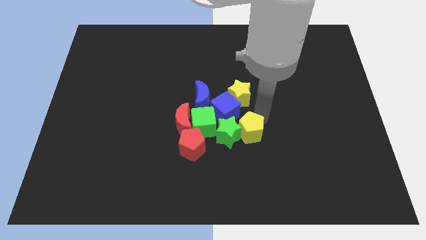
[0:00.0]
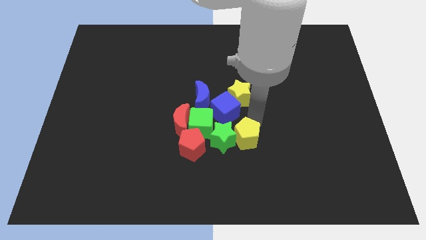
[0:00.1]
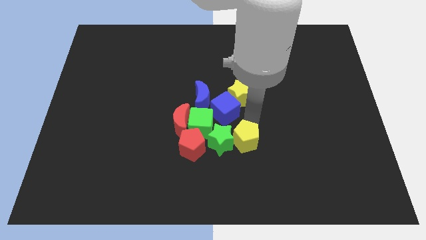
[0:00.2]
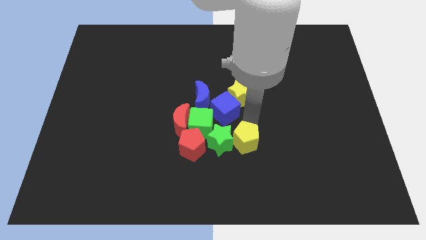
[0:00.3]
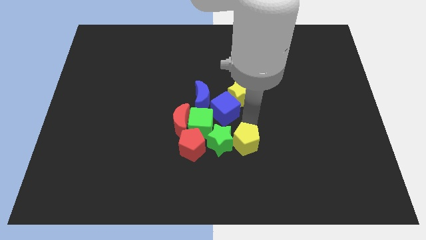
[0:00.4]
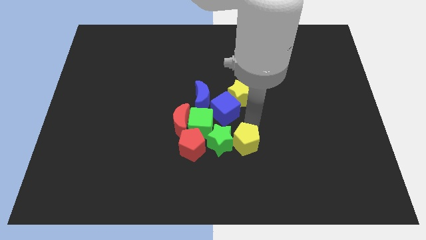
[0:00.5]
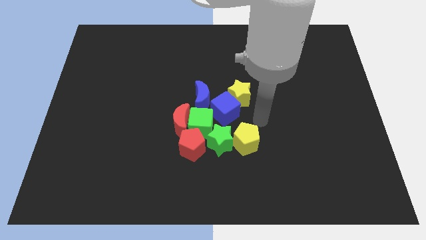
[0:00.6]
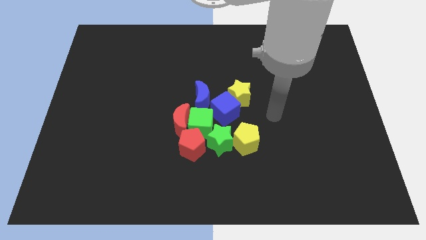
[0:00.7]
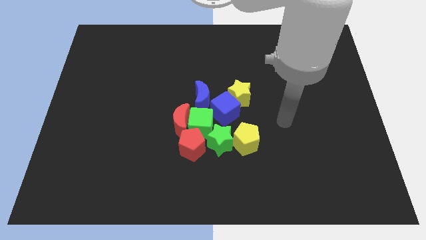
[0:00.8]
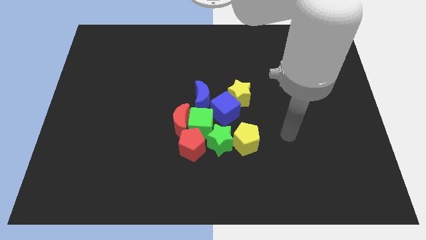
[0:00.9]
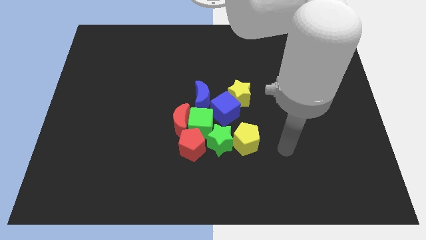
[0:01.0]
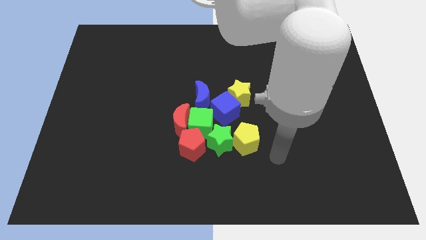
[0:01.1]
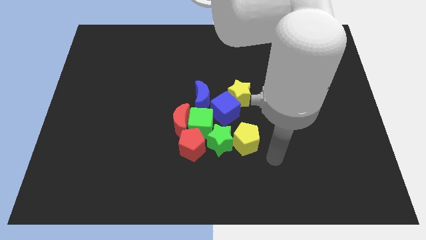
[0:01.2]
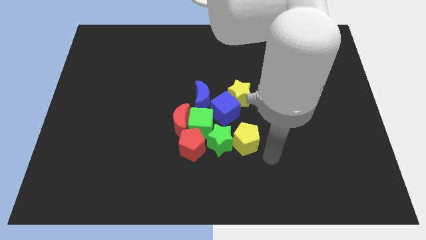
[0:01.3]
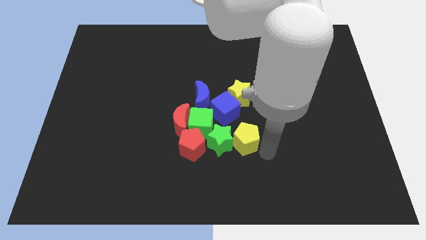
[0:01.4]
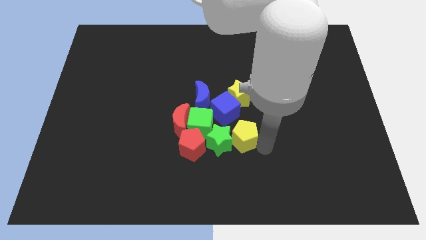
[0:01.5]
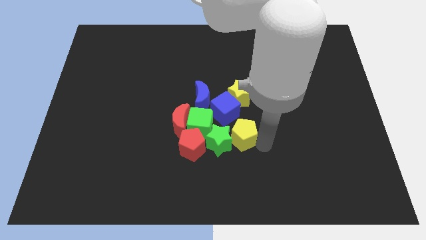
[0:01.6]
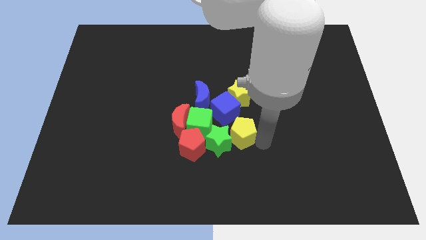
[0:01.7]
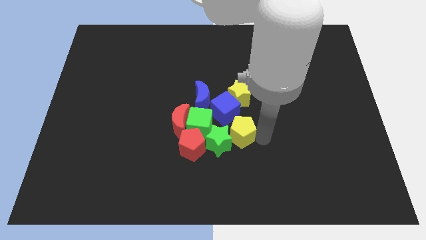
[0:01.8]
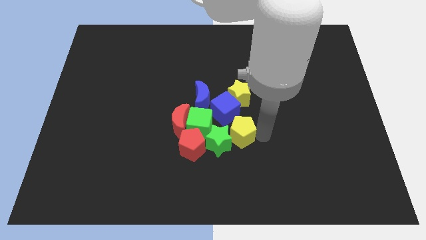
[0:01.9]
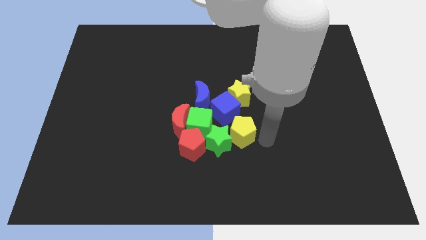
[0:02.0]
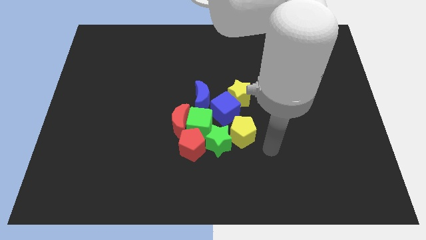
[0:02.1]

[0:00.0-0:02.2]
push the yellow pentagon to the right side of the green star

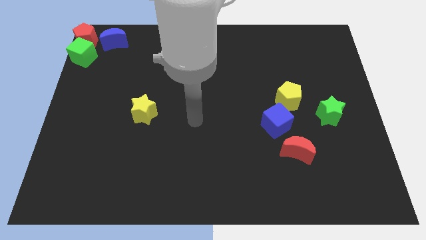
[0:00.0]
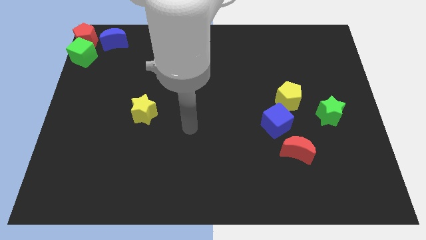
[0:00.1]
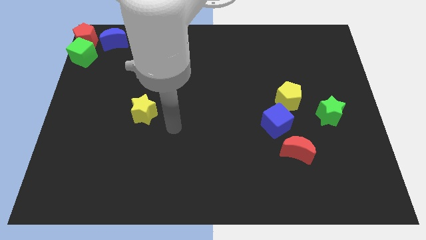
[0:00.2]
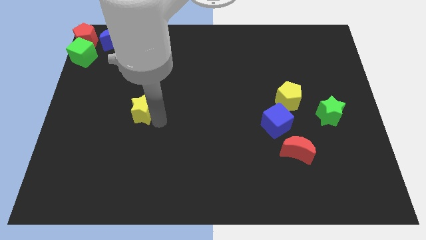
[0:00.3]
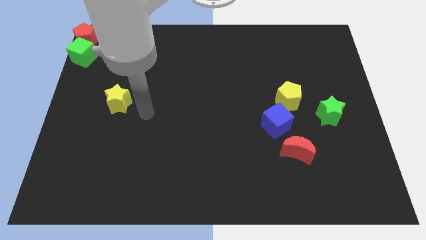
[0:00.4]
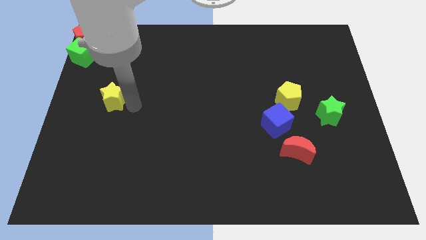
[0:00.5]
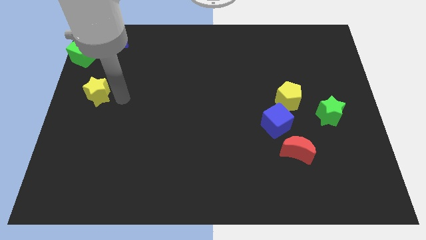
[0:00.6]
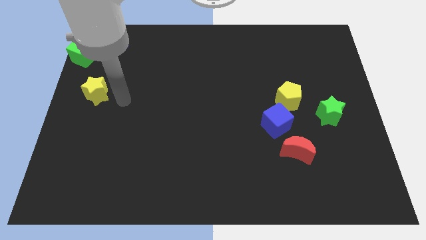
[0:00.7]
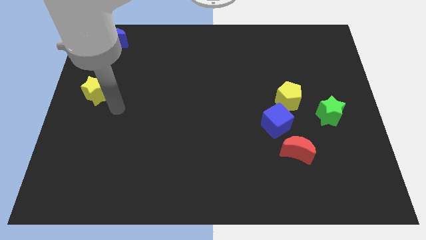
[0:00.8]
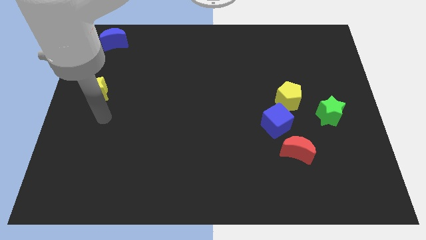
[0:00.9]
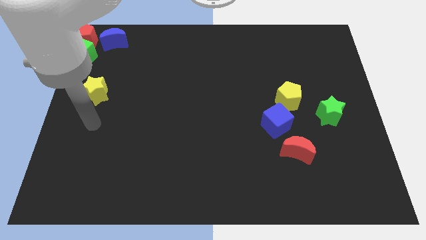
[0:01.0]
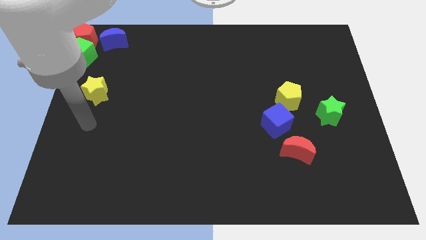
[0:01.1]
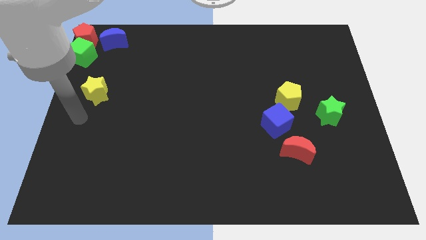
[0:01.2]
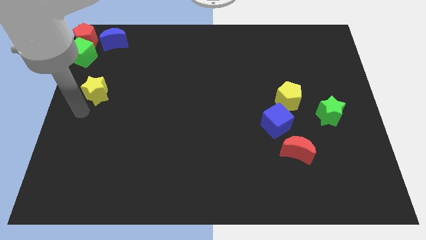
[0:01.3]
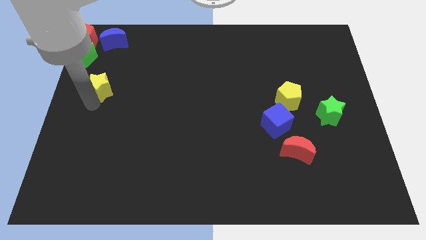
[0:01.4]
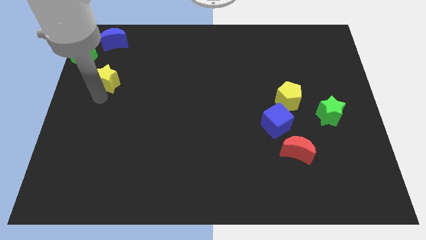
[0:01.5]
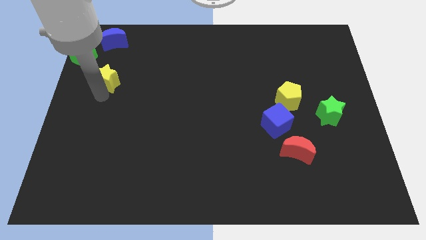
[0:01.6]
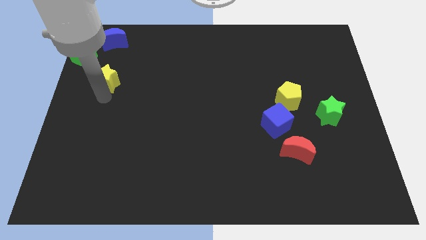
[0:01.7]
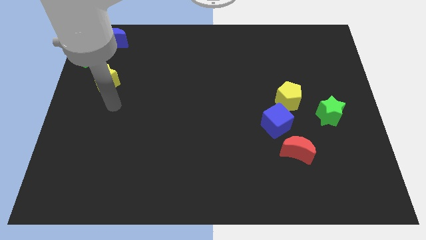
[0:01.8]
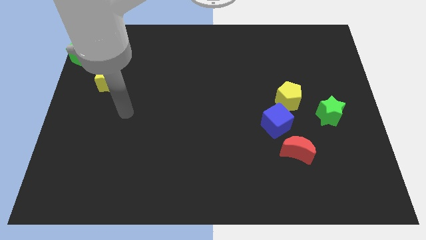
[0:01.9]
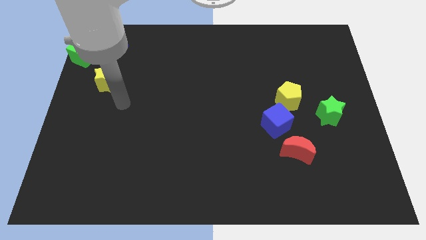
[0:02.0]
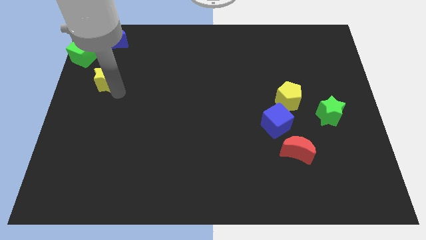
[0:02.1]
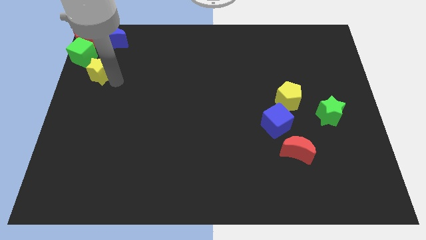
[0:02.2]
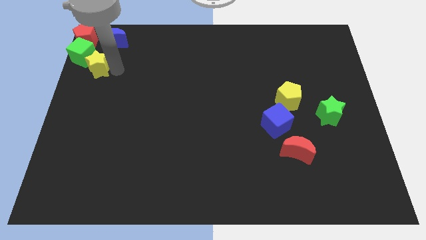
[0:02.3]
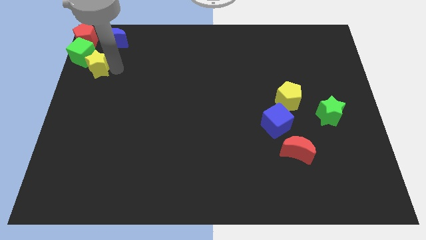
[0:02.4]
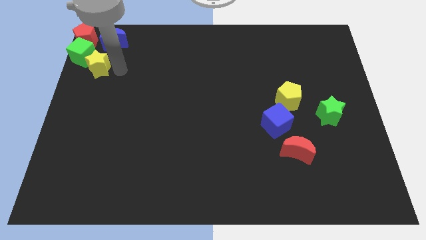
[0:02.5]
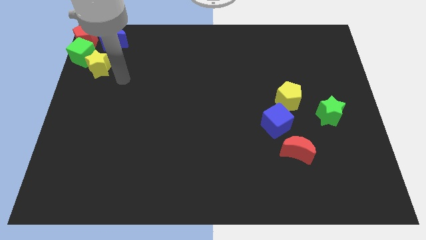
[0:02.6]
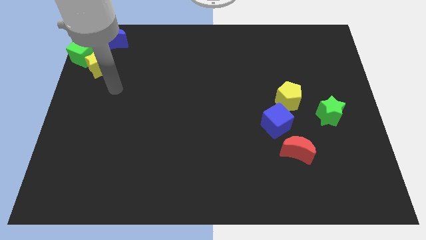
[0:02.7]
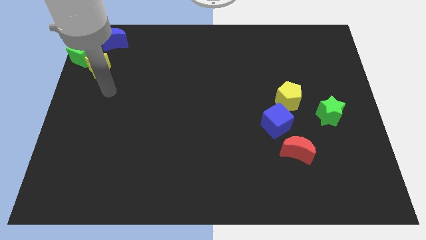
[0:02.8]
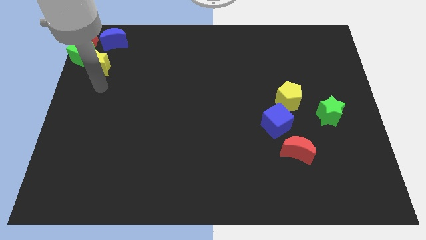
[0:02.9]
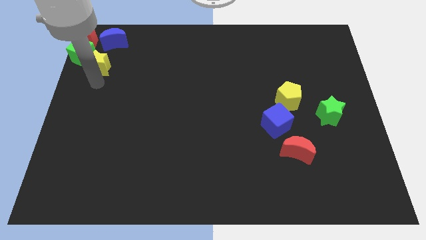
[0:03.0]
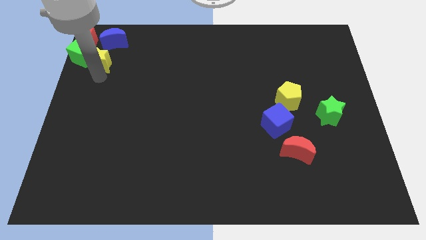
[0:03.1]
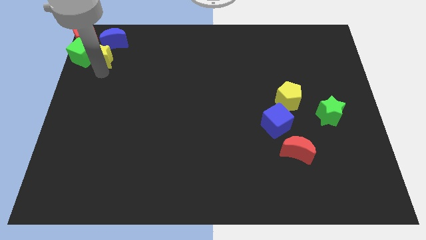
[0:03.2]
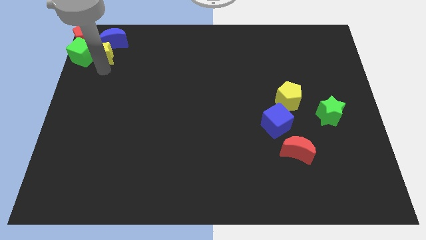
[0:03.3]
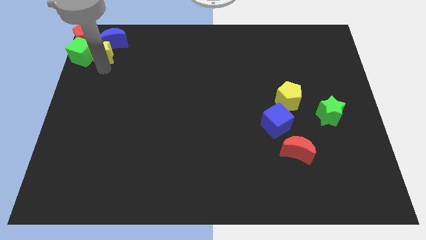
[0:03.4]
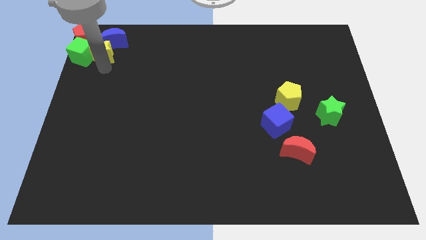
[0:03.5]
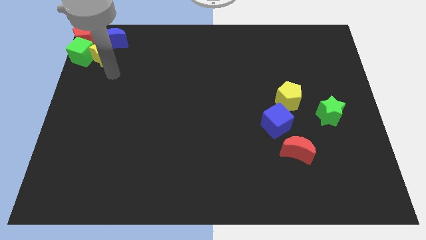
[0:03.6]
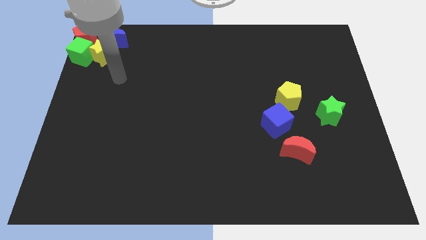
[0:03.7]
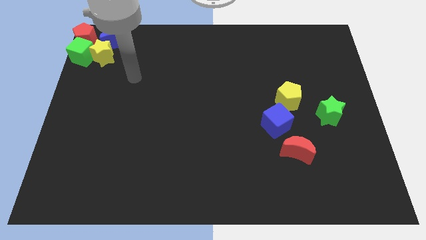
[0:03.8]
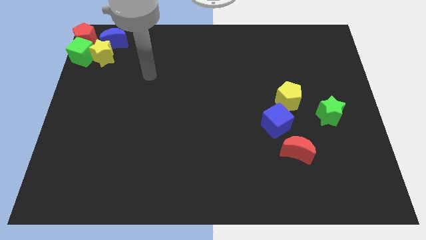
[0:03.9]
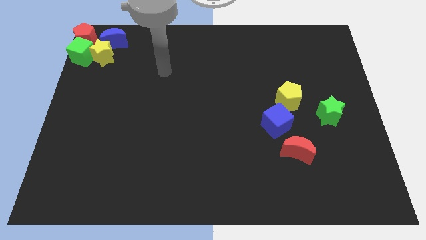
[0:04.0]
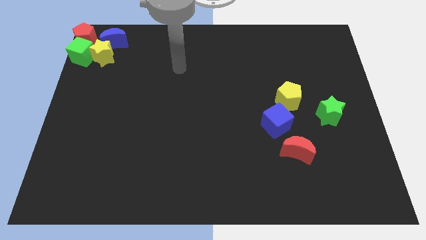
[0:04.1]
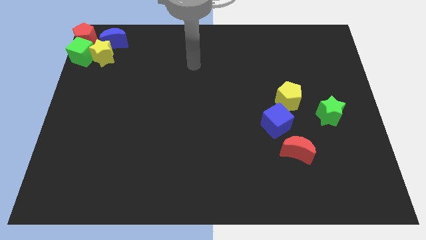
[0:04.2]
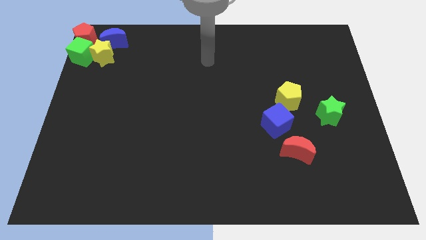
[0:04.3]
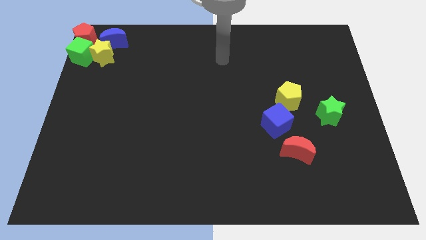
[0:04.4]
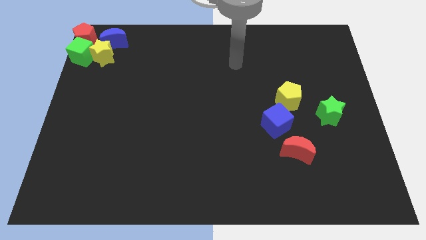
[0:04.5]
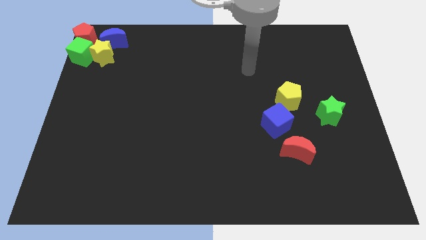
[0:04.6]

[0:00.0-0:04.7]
push the yellow star to the right of the green cube closely

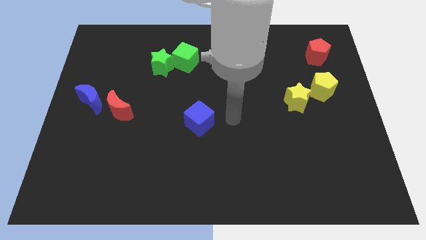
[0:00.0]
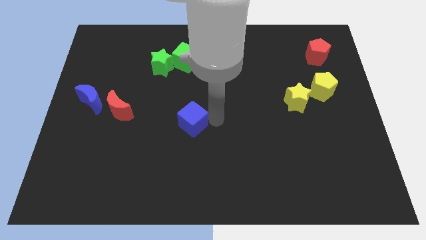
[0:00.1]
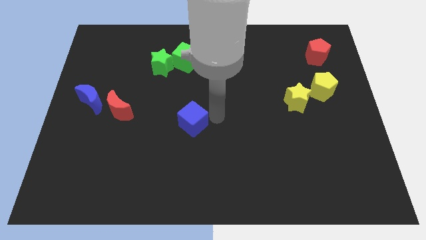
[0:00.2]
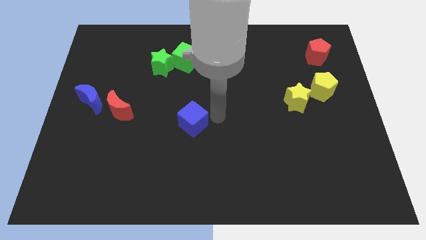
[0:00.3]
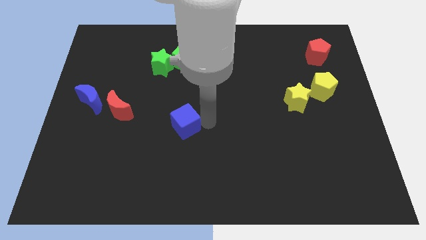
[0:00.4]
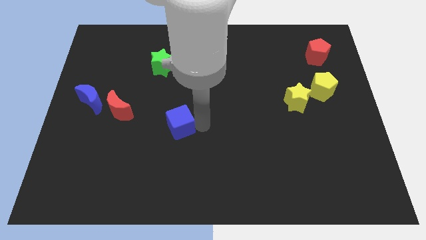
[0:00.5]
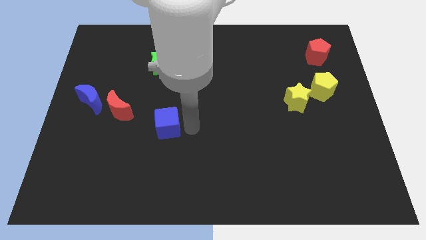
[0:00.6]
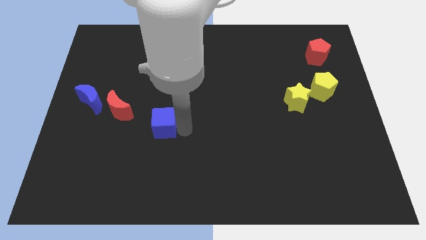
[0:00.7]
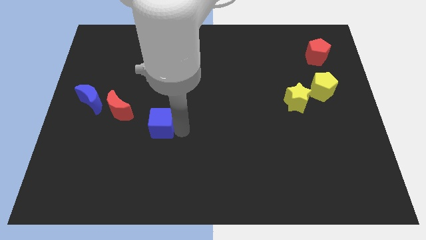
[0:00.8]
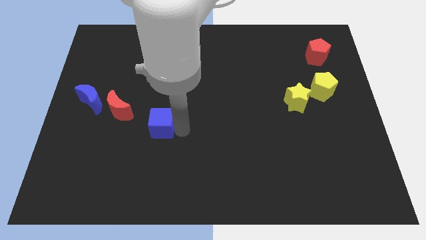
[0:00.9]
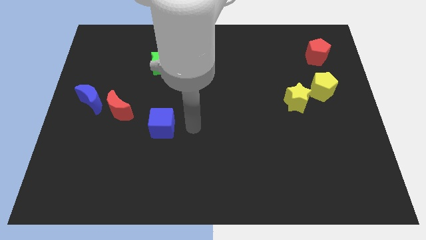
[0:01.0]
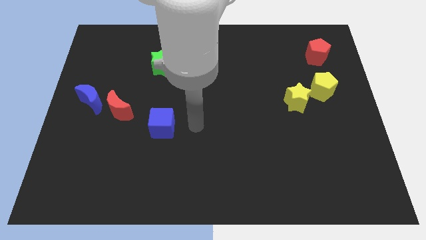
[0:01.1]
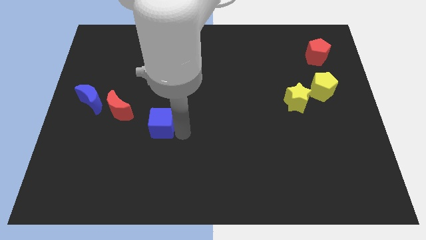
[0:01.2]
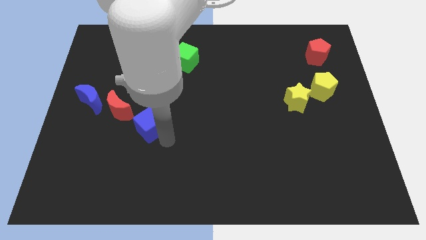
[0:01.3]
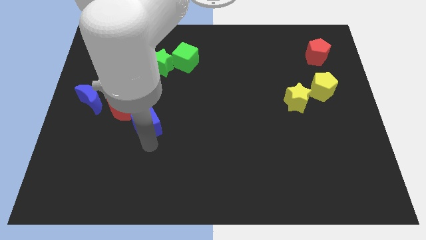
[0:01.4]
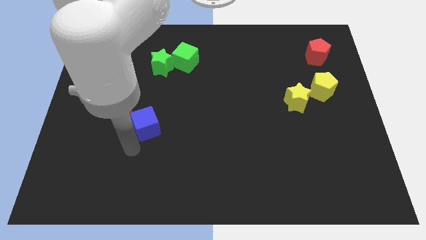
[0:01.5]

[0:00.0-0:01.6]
push the blue cube towards red crescent

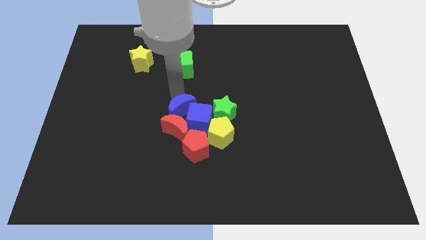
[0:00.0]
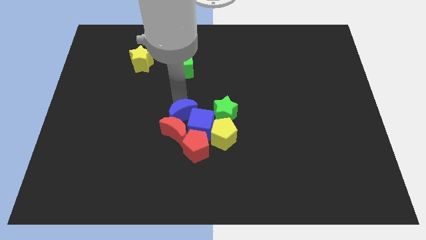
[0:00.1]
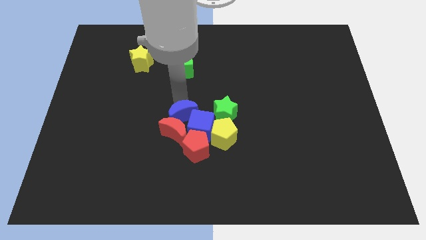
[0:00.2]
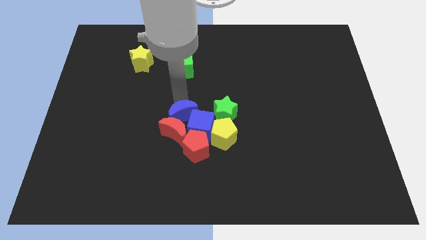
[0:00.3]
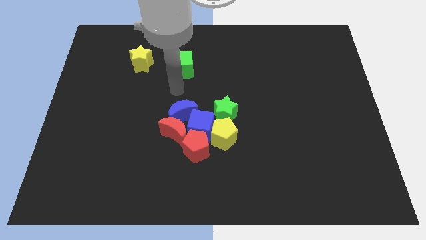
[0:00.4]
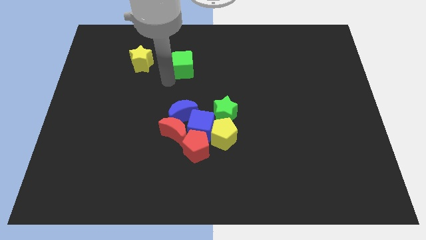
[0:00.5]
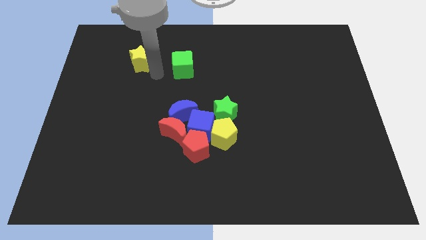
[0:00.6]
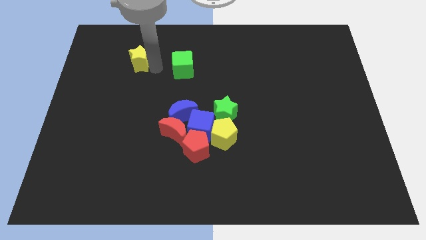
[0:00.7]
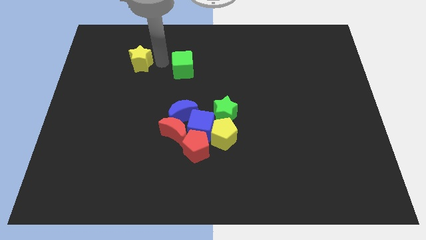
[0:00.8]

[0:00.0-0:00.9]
push the blue crescent into the blue cube and red crescent from the top
